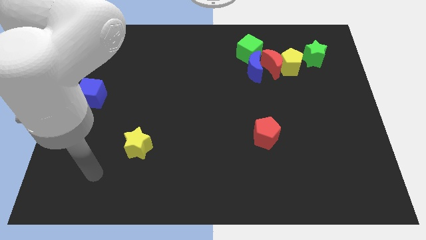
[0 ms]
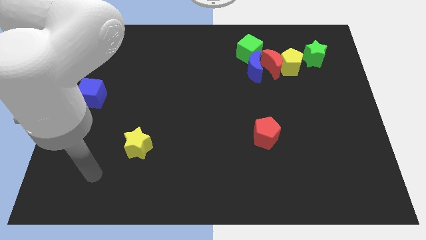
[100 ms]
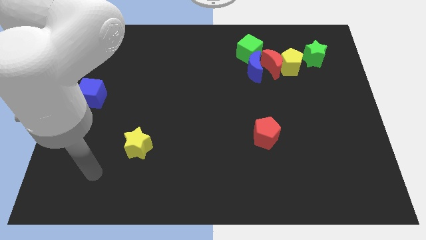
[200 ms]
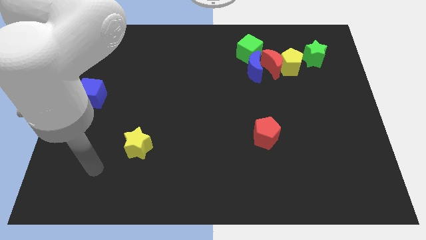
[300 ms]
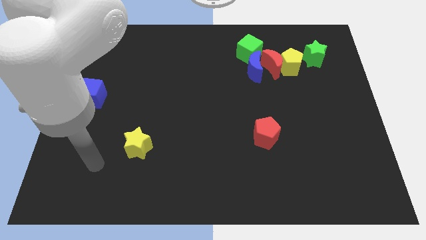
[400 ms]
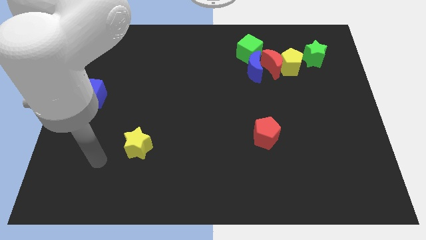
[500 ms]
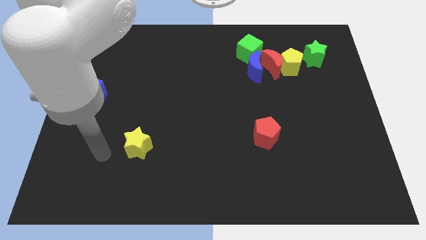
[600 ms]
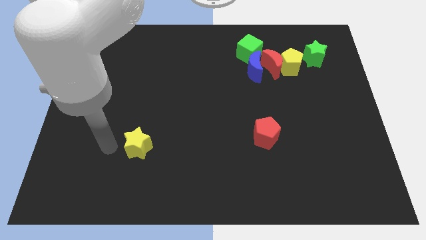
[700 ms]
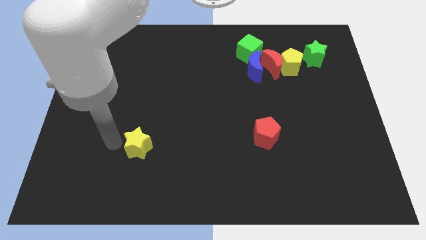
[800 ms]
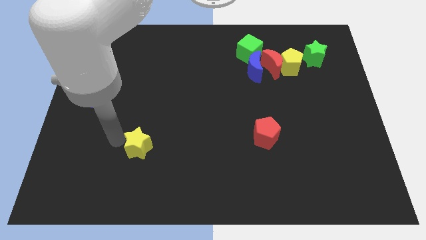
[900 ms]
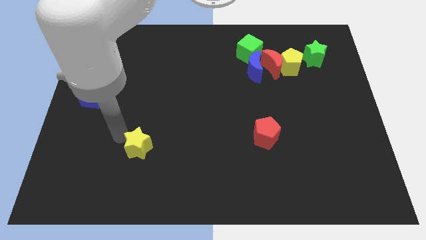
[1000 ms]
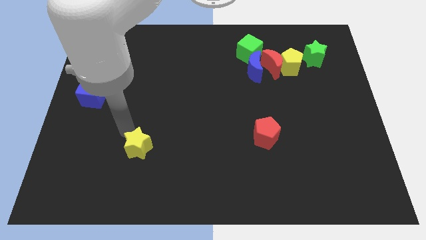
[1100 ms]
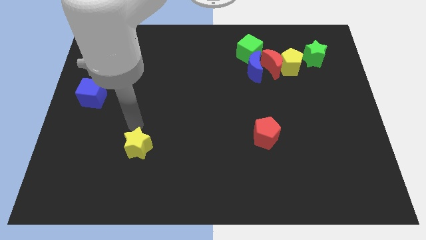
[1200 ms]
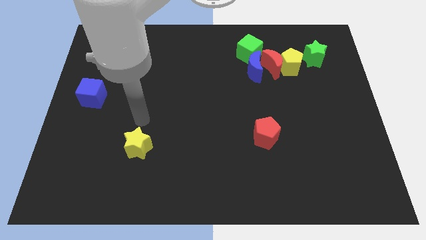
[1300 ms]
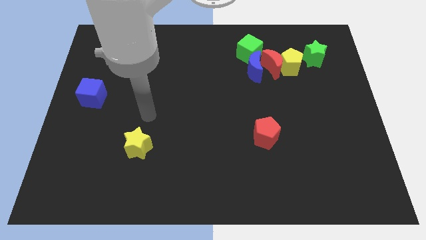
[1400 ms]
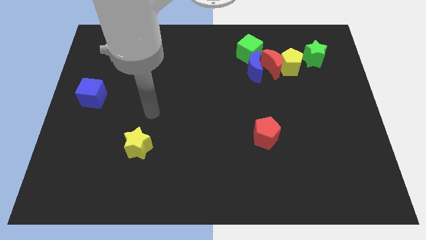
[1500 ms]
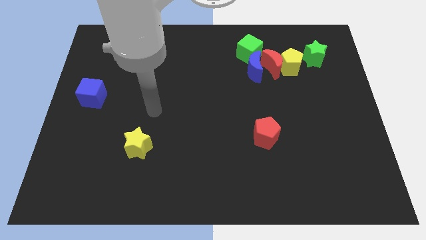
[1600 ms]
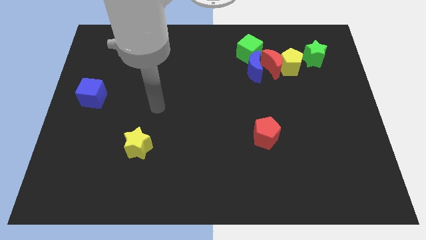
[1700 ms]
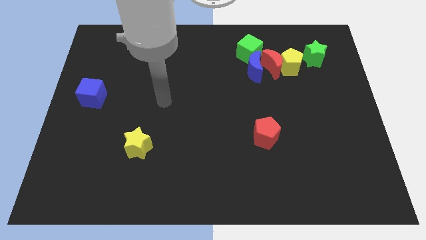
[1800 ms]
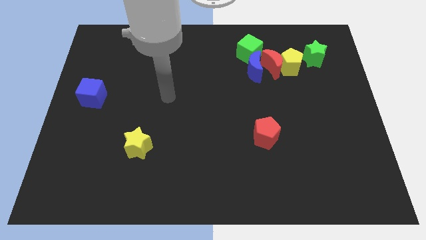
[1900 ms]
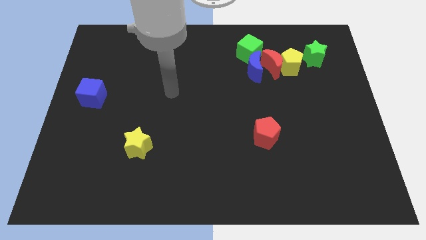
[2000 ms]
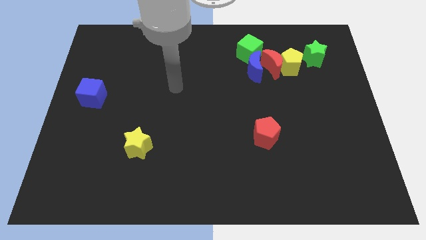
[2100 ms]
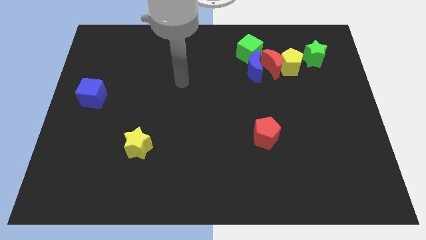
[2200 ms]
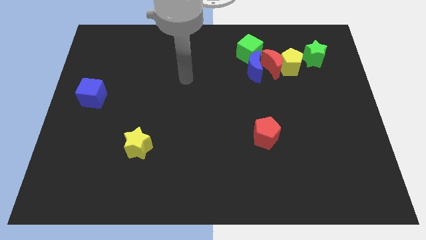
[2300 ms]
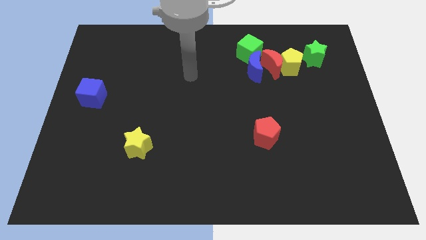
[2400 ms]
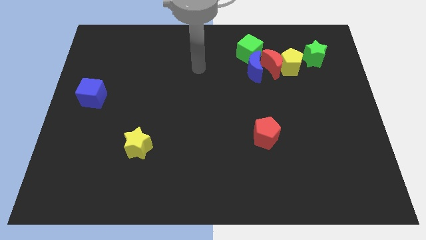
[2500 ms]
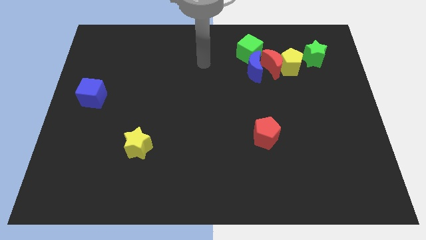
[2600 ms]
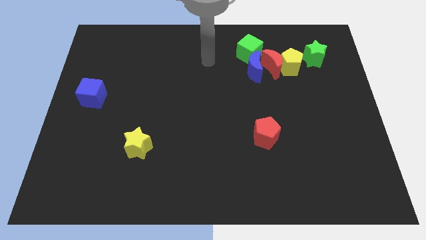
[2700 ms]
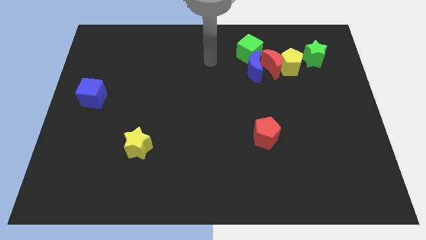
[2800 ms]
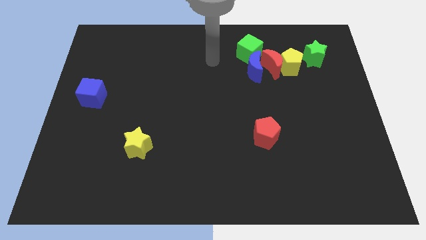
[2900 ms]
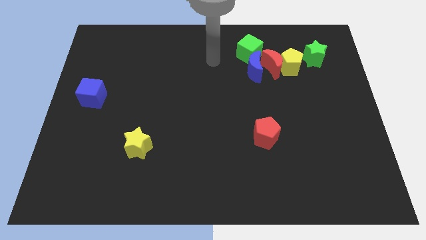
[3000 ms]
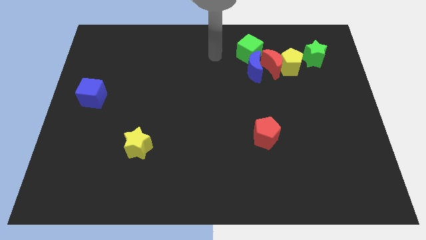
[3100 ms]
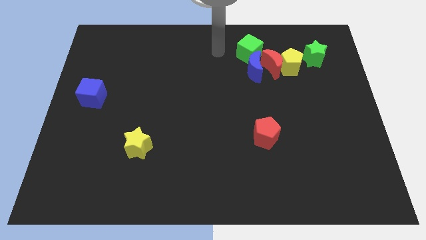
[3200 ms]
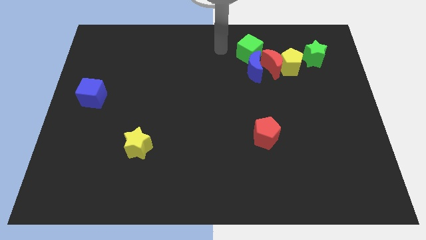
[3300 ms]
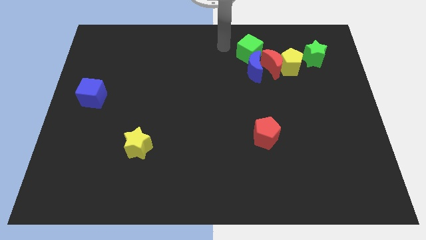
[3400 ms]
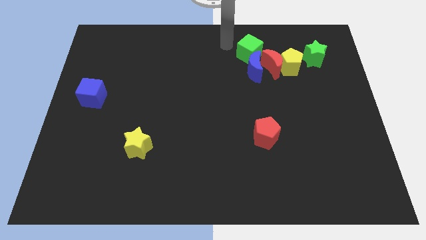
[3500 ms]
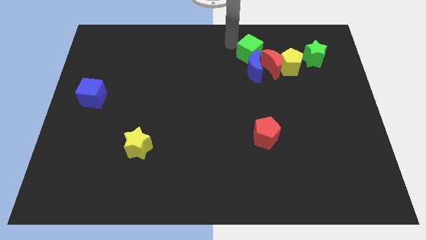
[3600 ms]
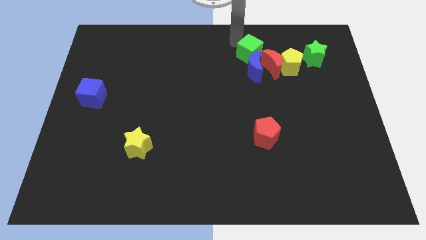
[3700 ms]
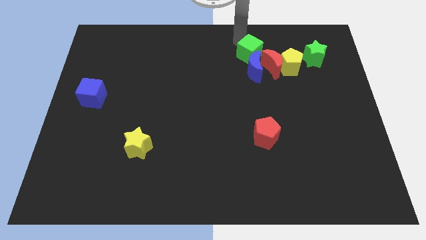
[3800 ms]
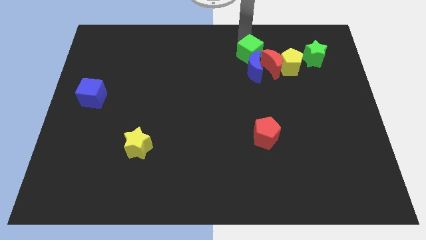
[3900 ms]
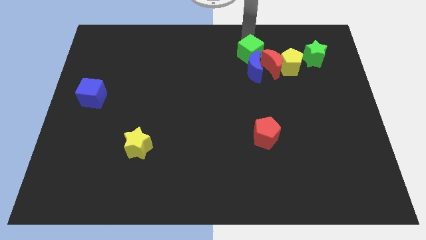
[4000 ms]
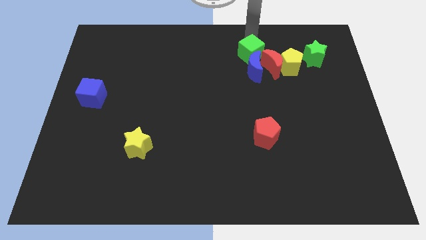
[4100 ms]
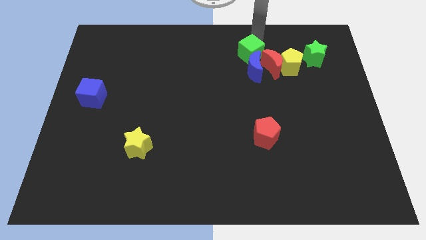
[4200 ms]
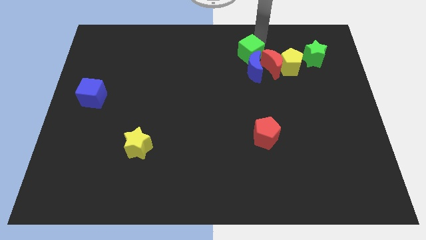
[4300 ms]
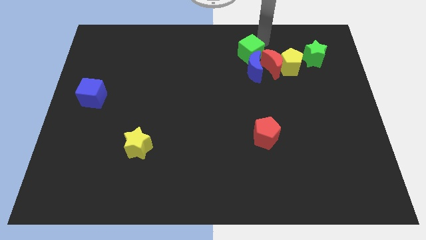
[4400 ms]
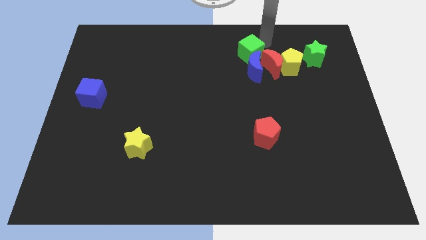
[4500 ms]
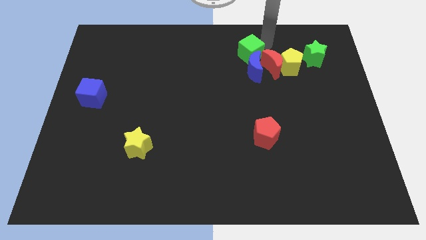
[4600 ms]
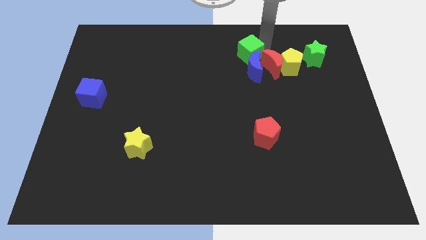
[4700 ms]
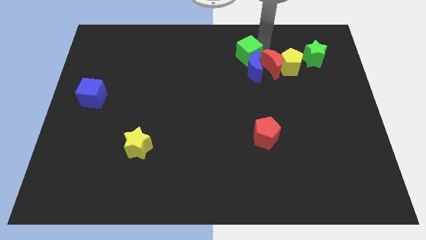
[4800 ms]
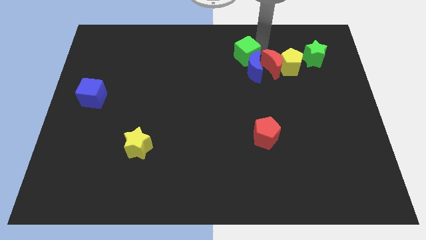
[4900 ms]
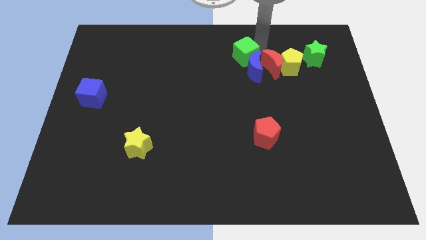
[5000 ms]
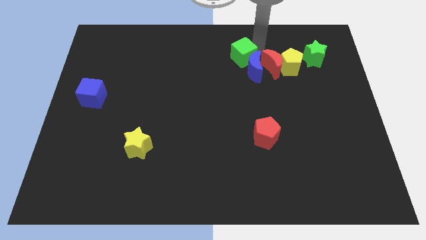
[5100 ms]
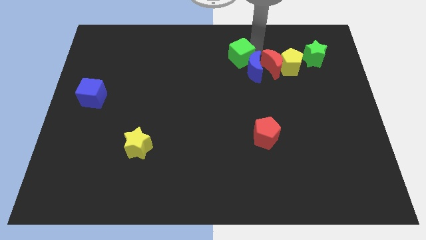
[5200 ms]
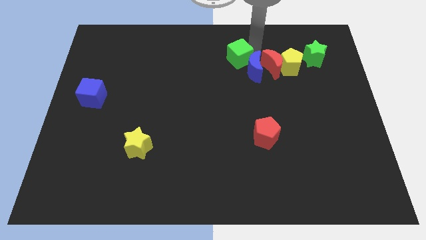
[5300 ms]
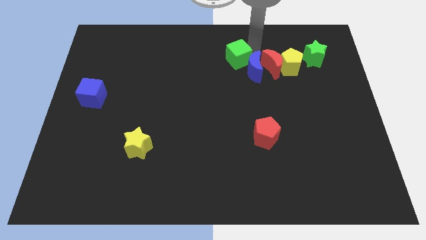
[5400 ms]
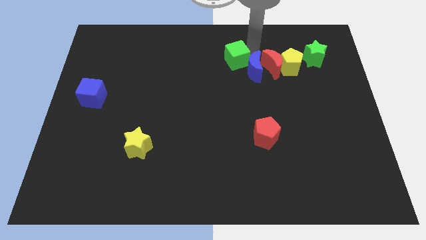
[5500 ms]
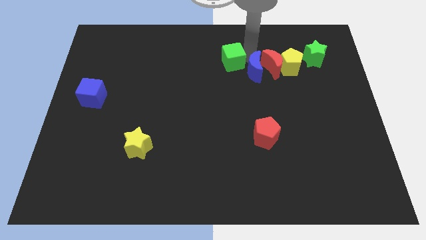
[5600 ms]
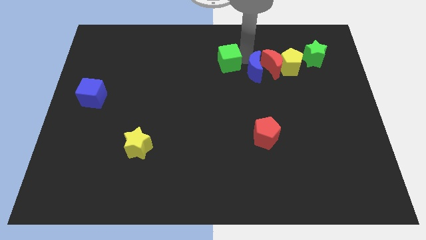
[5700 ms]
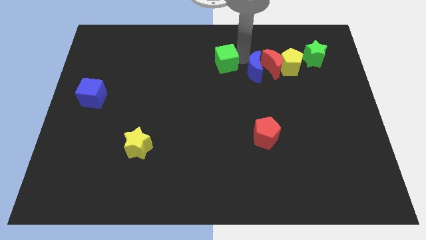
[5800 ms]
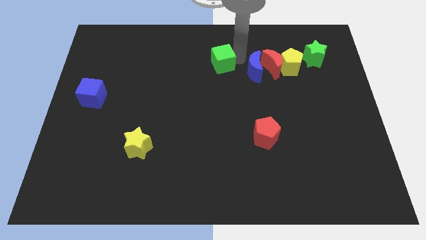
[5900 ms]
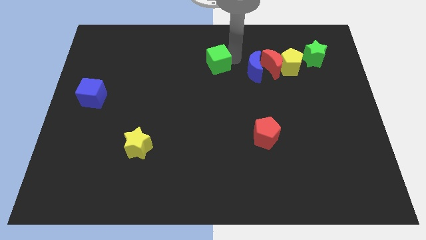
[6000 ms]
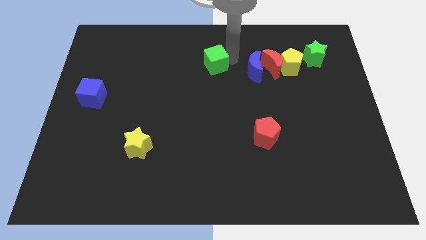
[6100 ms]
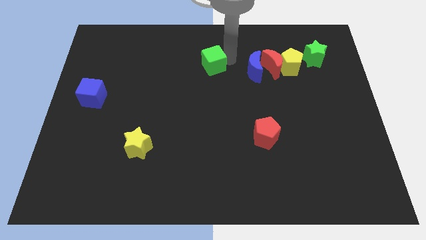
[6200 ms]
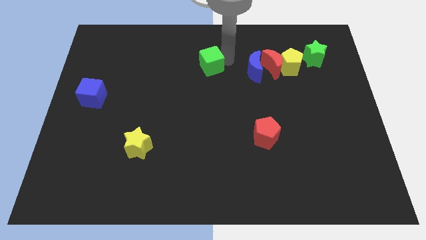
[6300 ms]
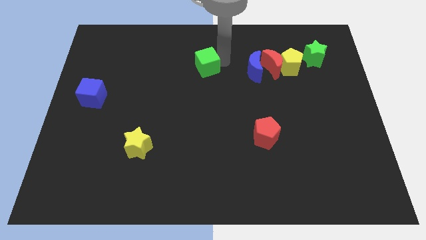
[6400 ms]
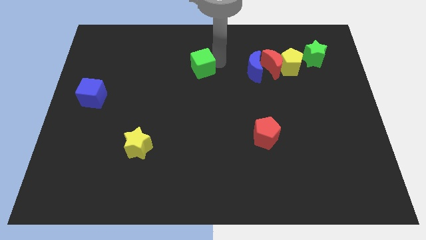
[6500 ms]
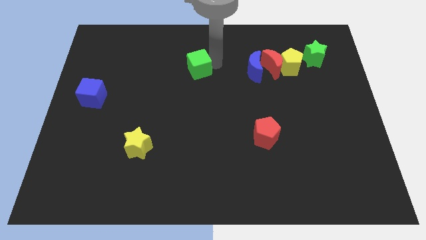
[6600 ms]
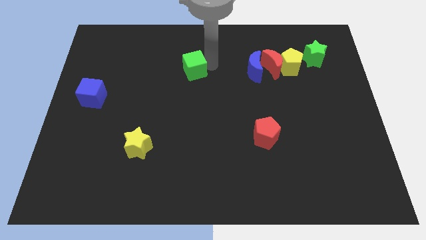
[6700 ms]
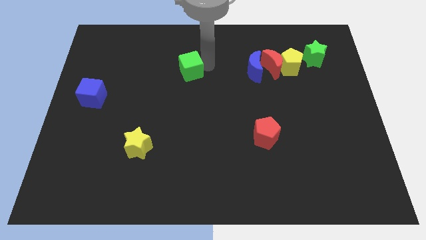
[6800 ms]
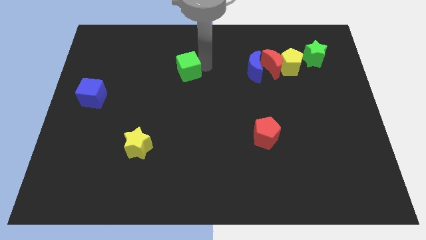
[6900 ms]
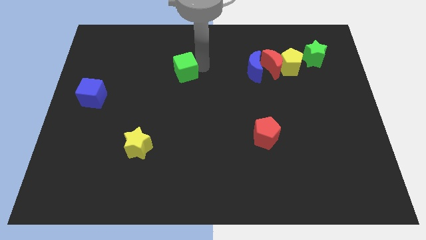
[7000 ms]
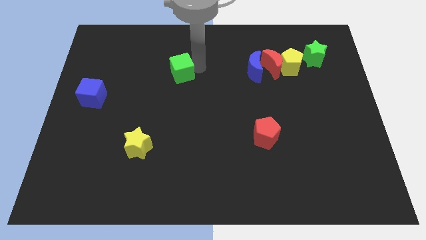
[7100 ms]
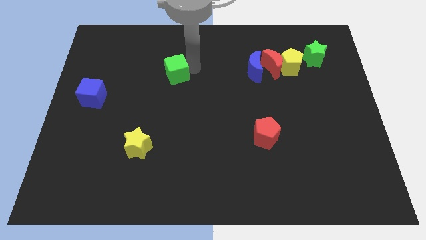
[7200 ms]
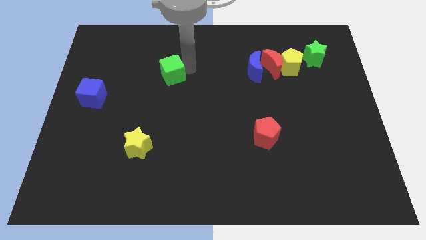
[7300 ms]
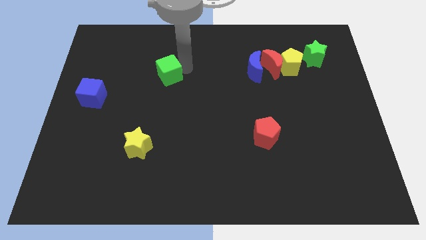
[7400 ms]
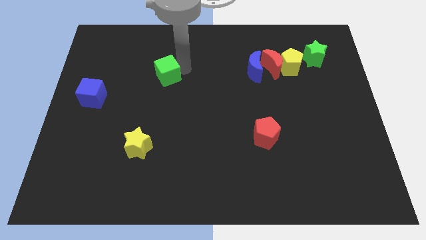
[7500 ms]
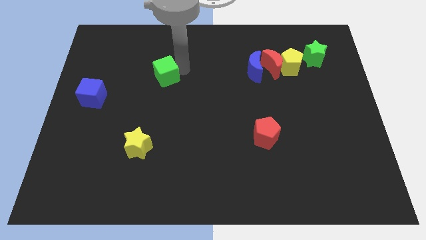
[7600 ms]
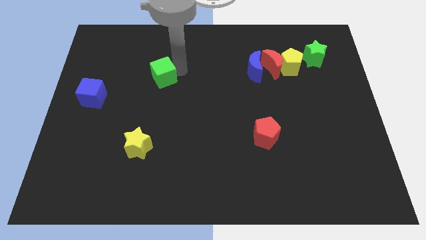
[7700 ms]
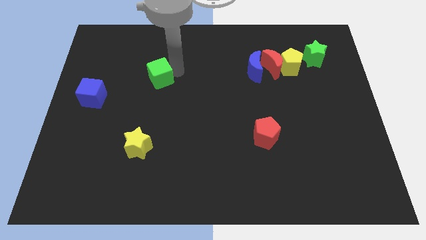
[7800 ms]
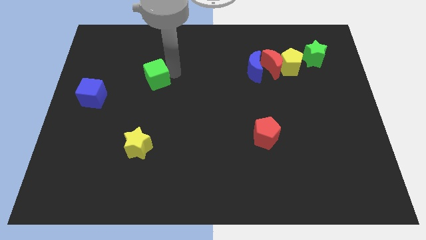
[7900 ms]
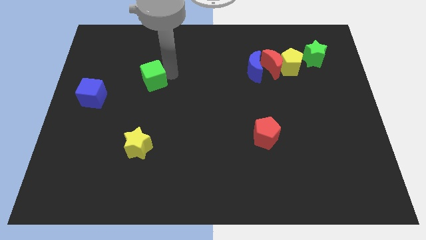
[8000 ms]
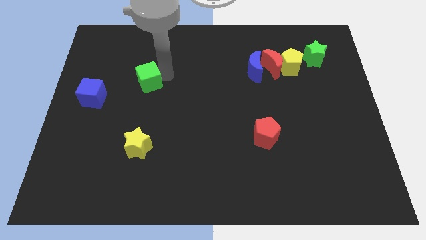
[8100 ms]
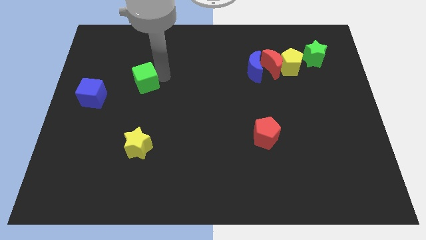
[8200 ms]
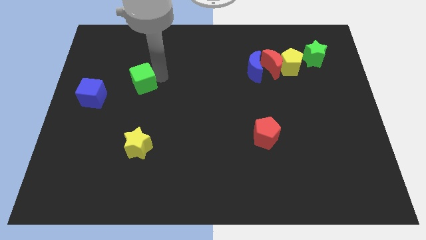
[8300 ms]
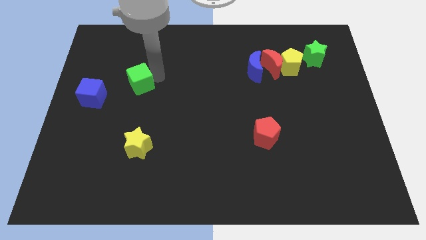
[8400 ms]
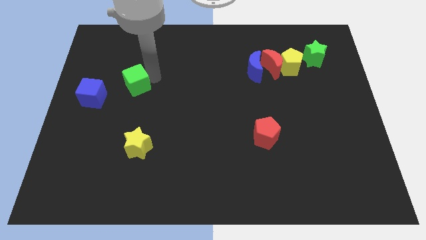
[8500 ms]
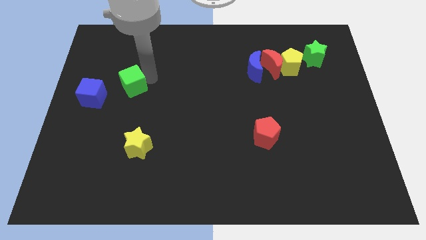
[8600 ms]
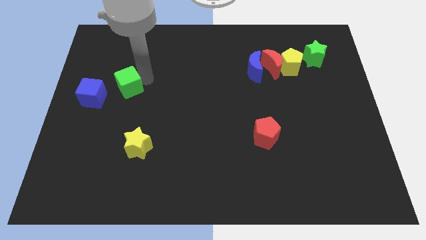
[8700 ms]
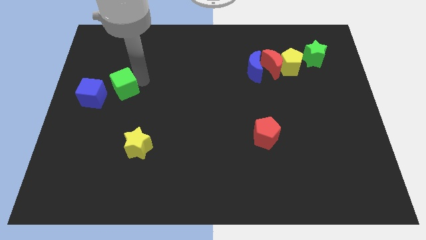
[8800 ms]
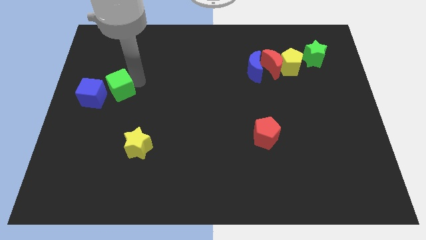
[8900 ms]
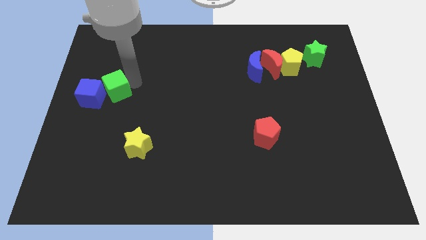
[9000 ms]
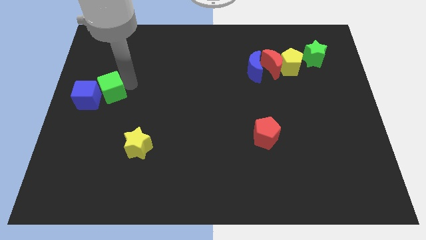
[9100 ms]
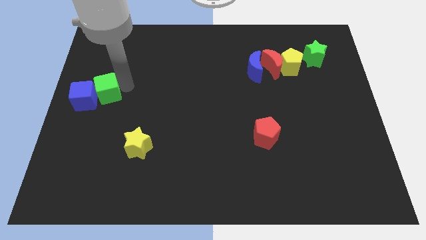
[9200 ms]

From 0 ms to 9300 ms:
move the green cube to the blue cube
